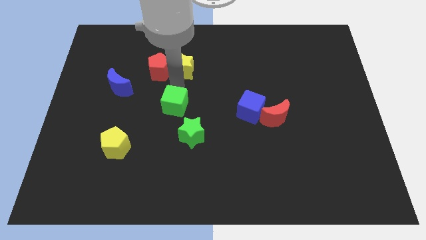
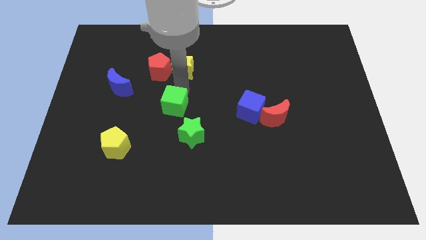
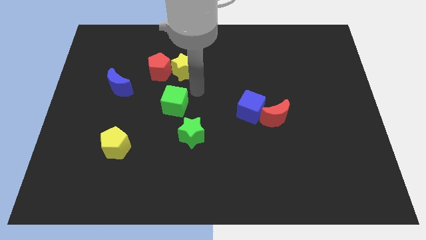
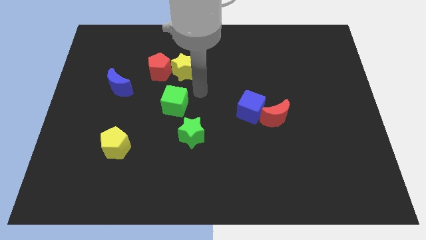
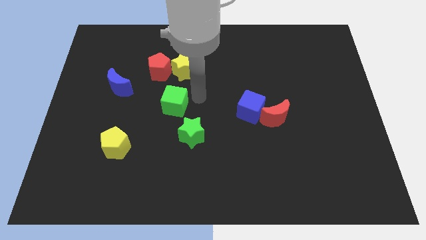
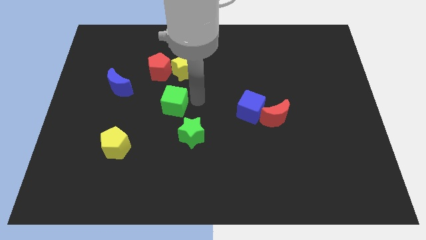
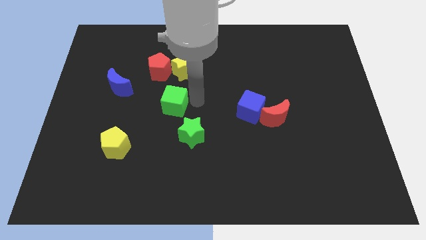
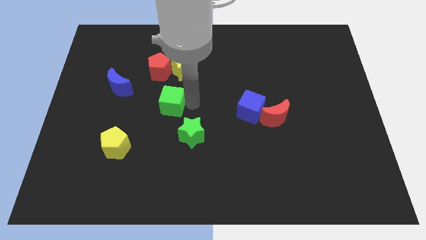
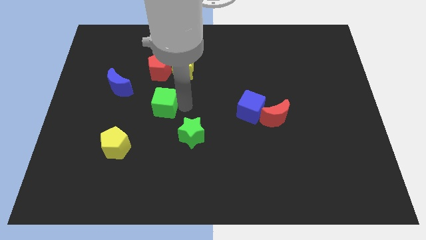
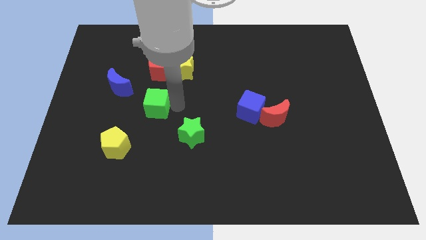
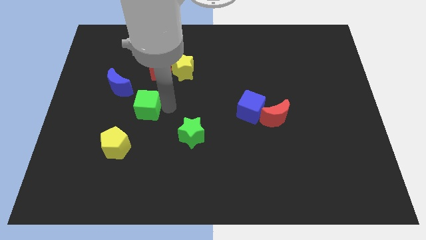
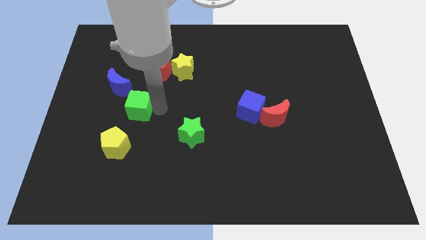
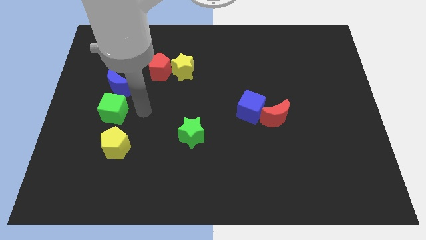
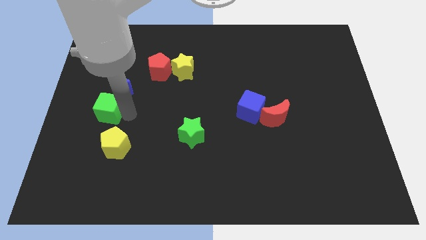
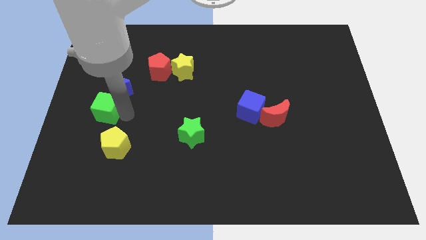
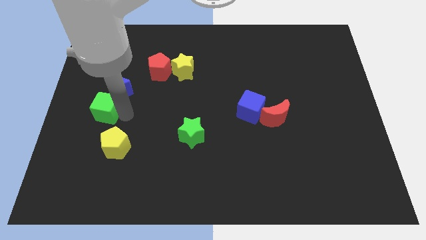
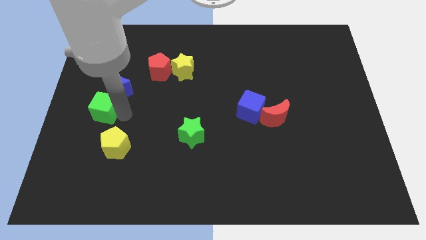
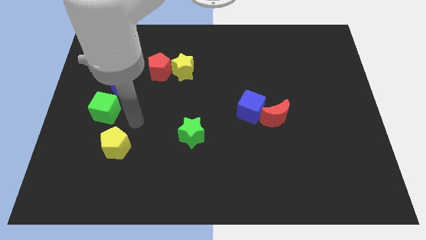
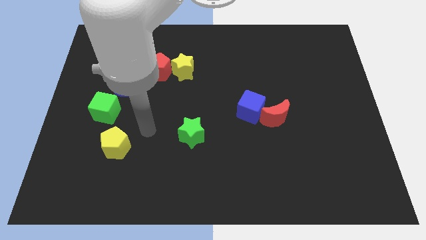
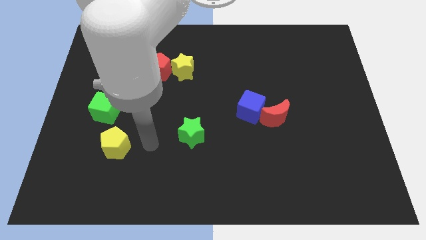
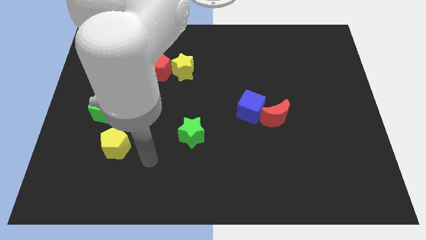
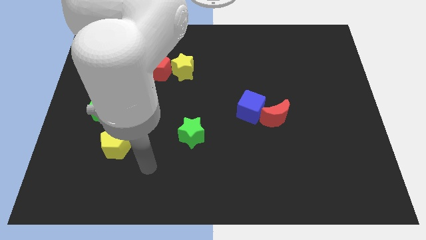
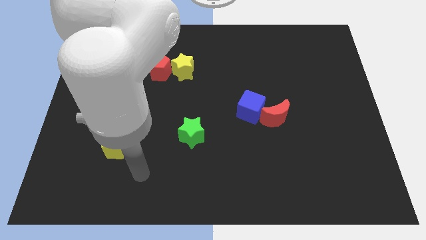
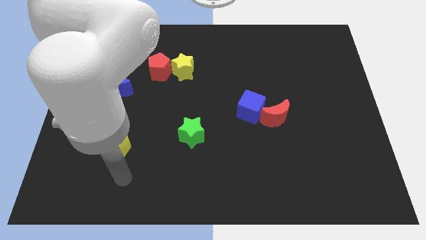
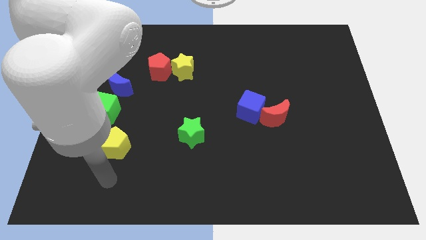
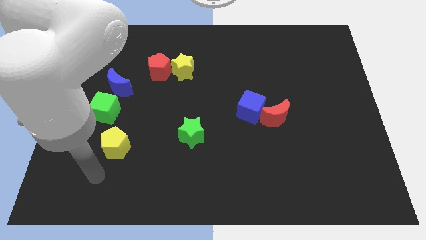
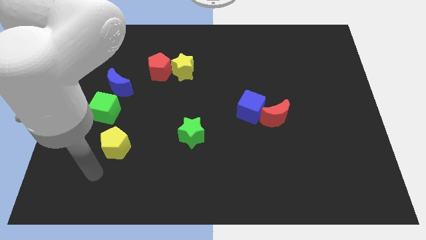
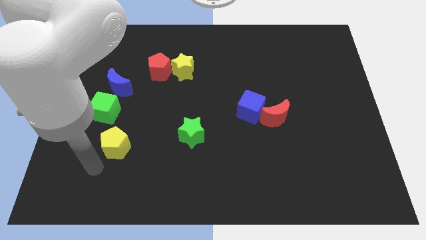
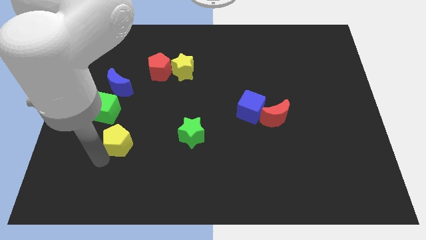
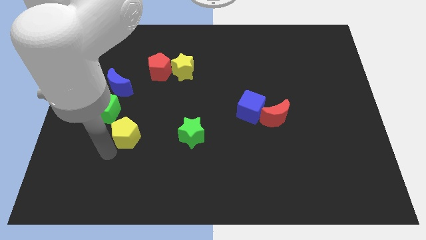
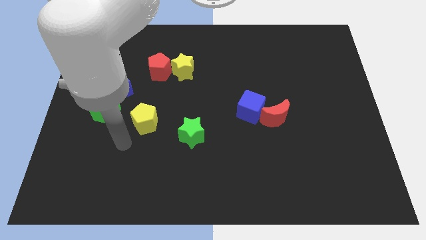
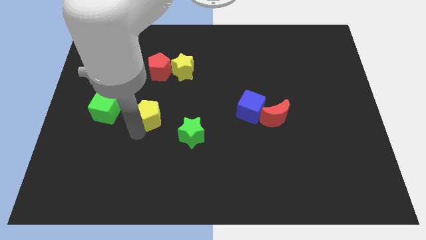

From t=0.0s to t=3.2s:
move green cube and the yellow pentagon parallel to each other

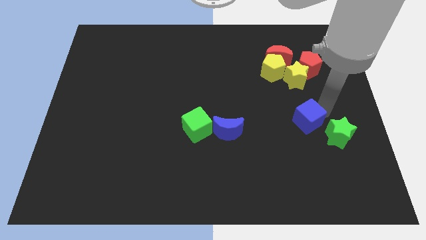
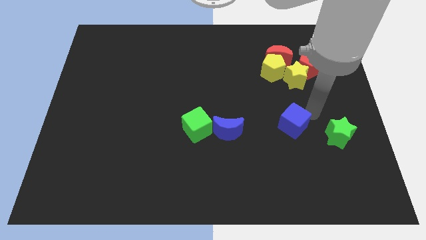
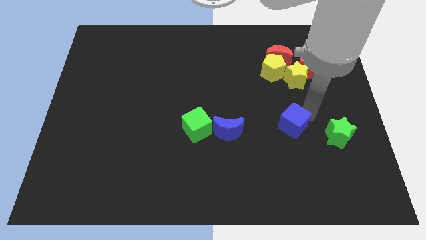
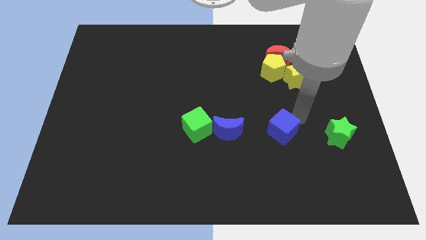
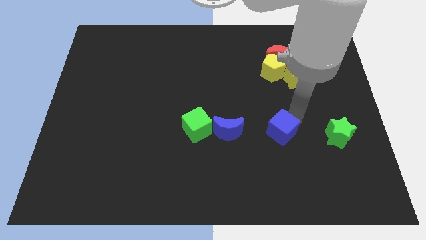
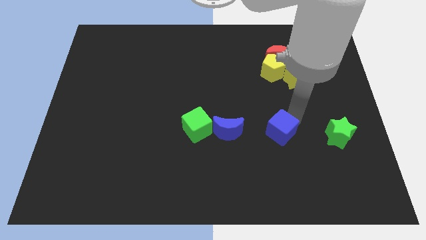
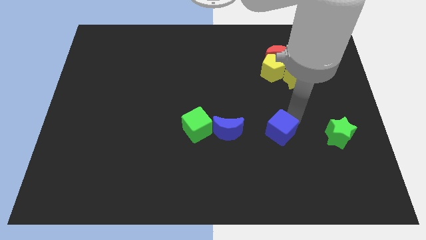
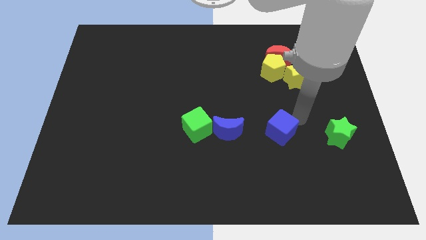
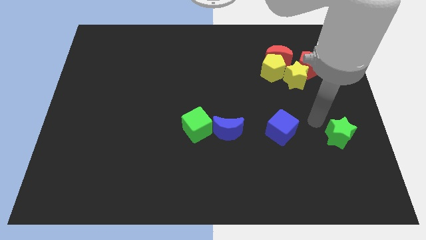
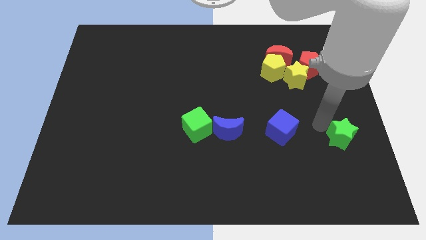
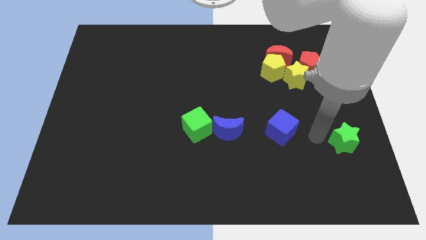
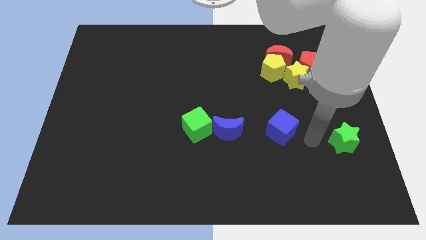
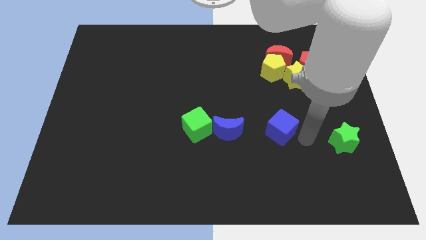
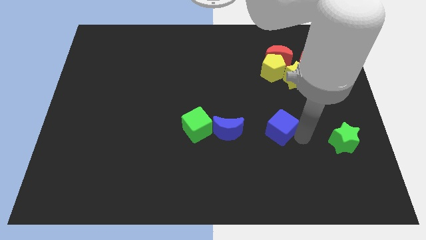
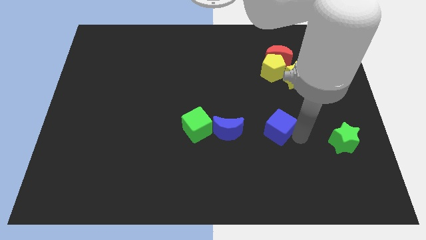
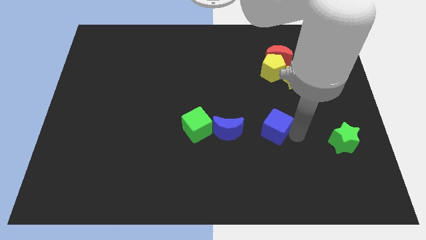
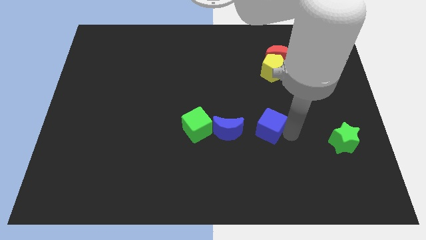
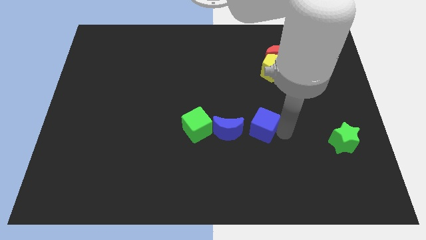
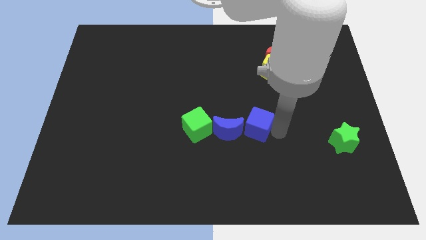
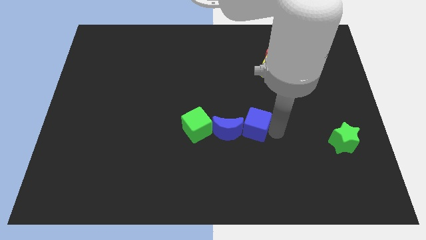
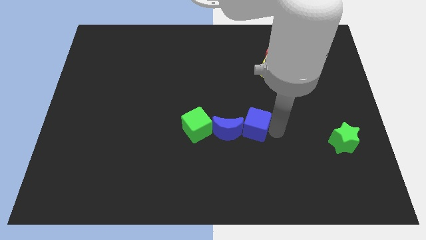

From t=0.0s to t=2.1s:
push the blue cube into the blue moon

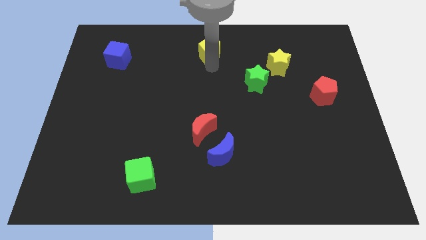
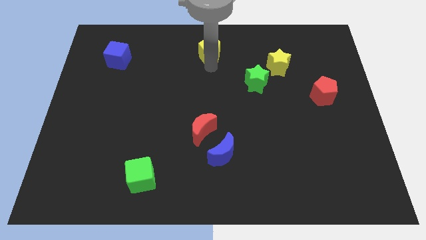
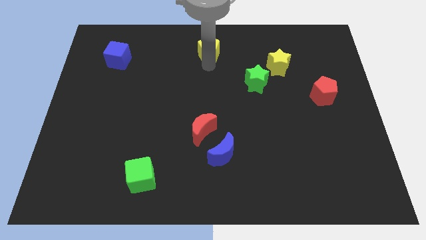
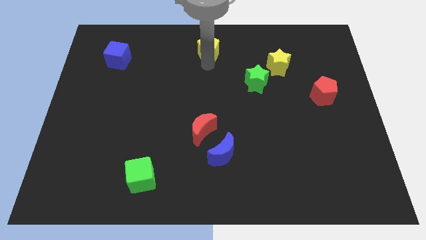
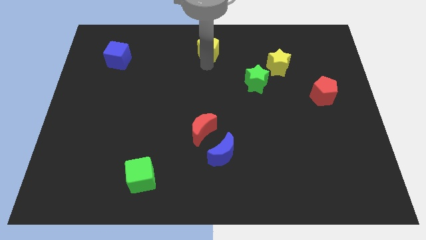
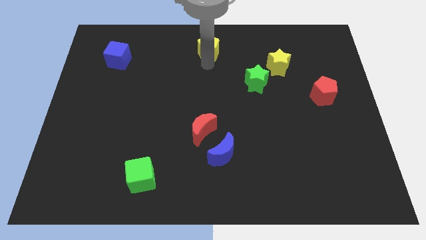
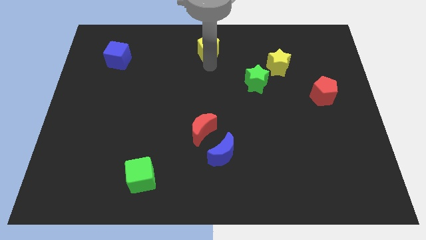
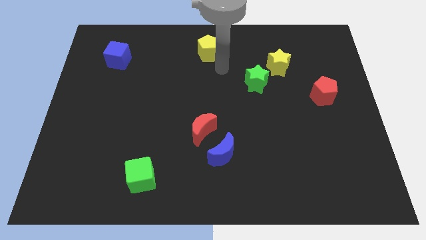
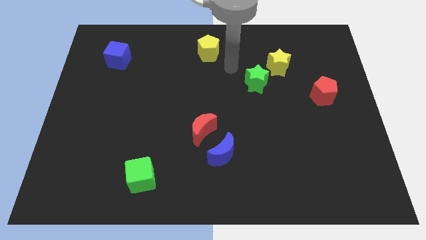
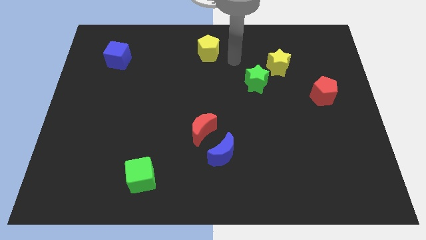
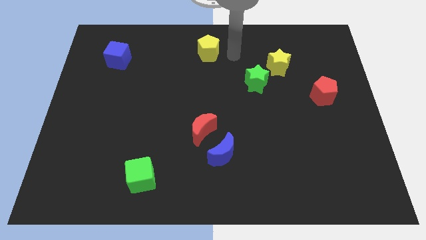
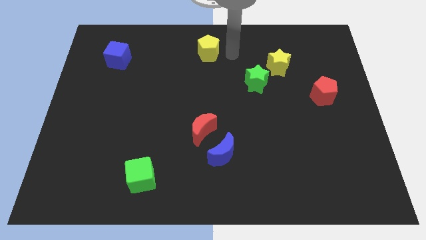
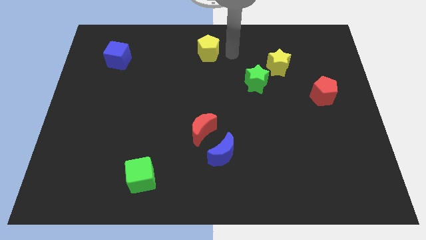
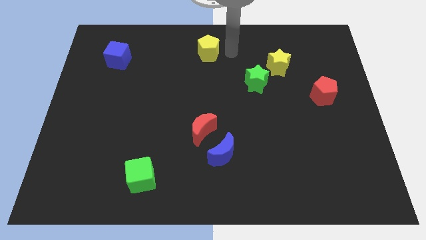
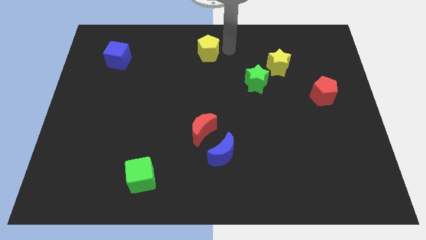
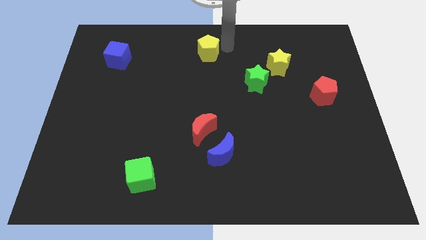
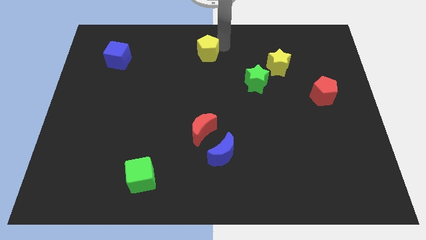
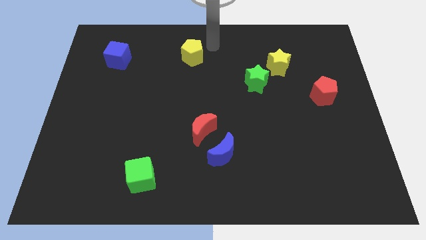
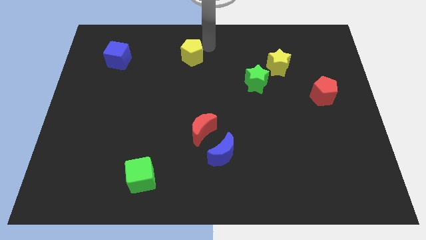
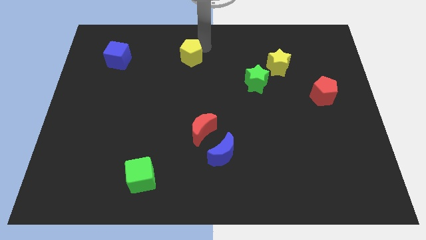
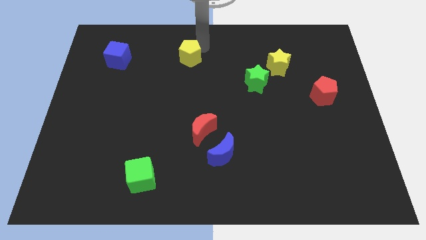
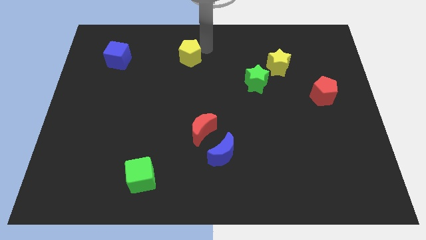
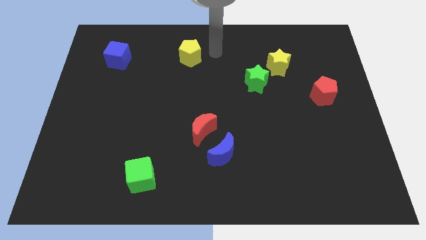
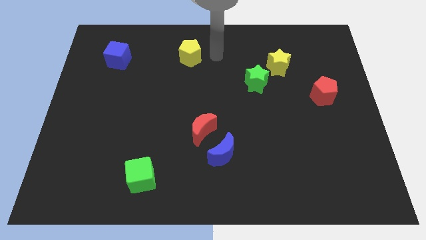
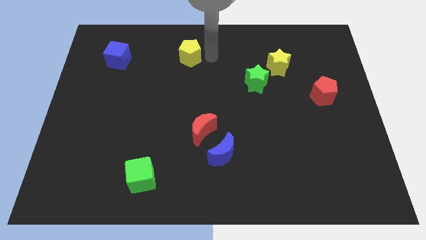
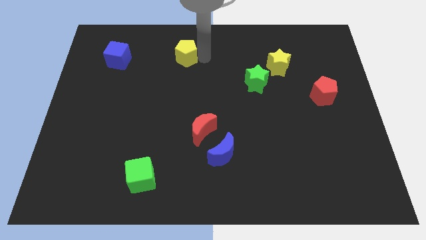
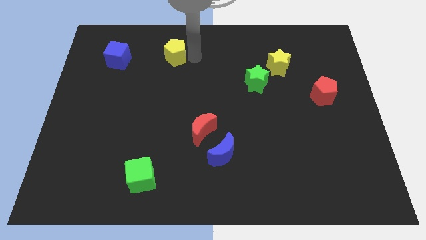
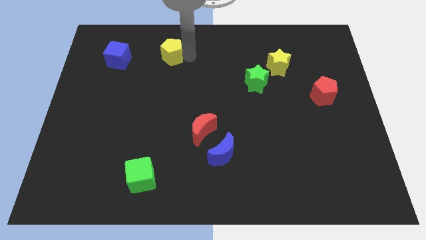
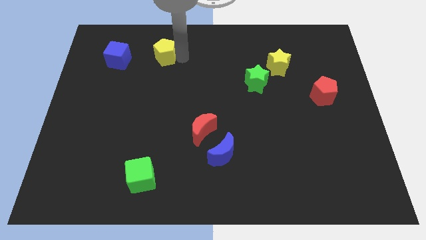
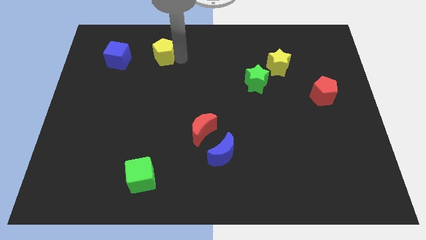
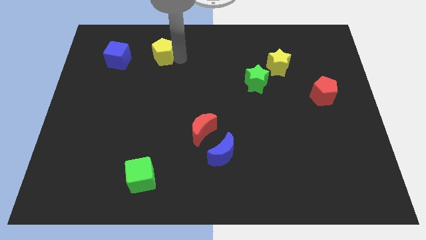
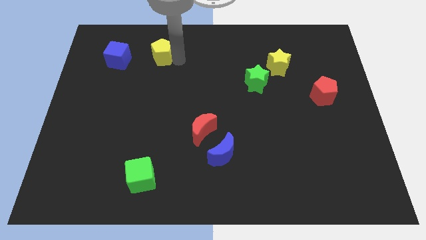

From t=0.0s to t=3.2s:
put the yellow pentagon to the right side of blue cube

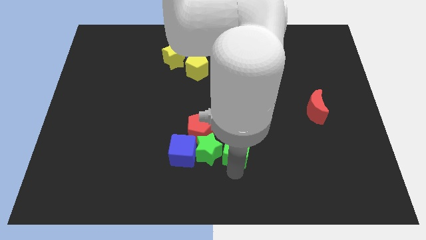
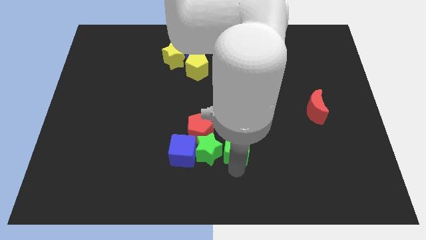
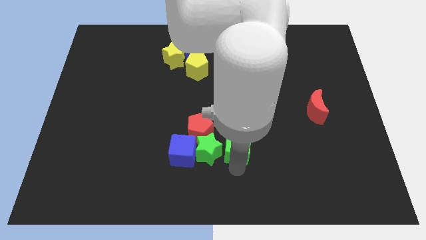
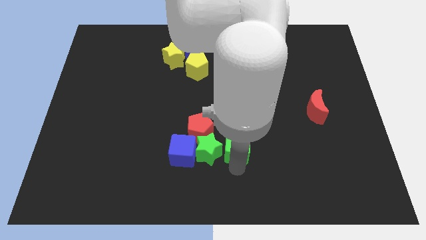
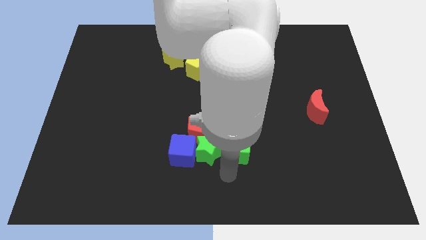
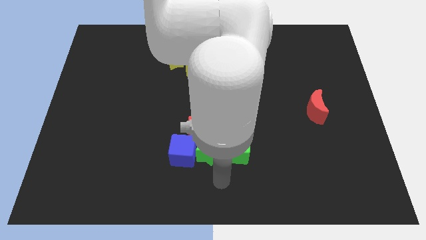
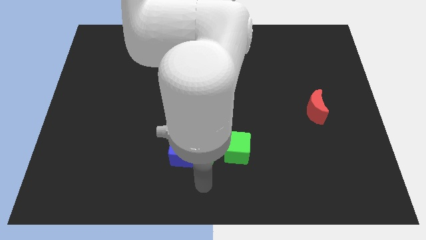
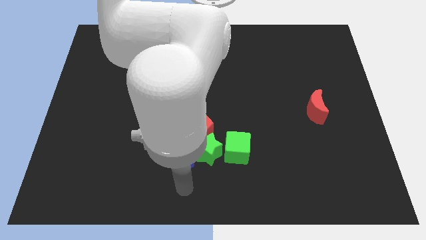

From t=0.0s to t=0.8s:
push green cube slightly upwards
